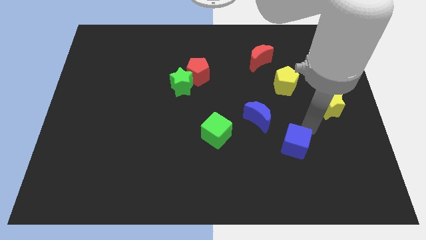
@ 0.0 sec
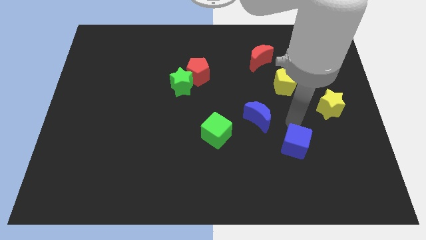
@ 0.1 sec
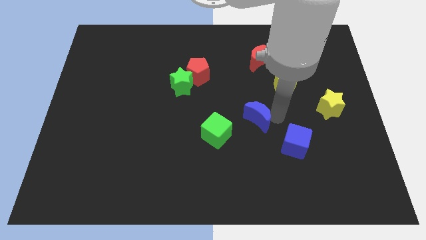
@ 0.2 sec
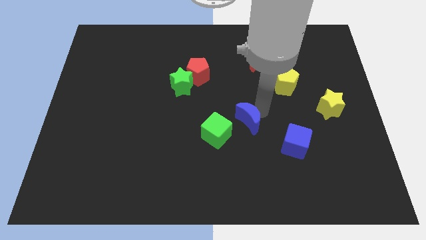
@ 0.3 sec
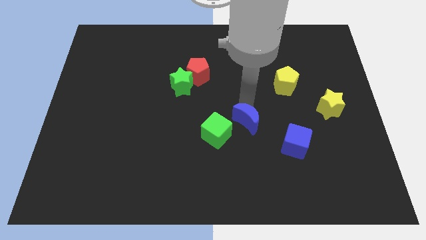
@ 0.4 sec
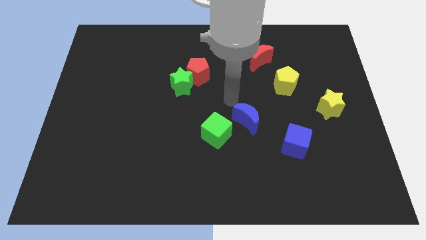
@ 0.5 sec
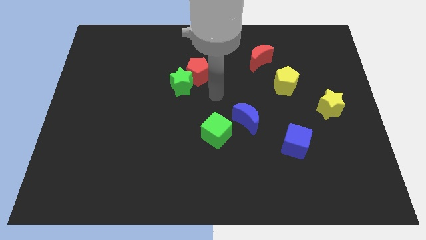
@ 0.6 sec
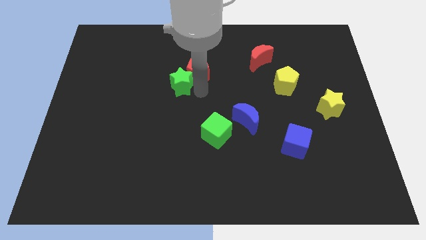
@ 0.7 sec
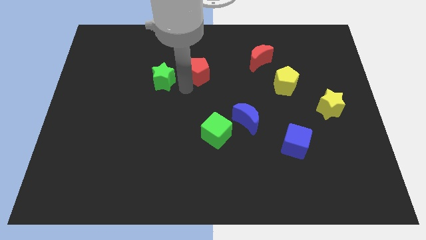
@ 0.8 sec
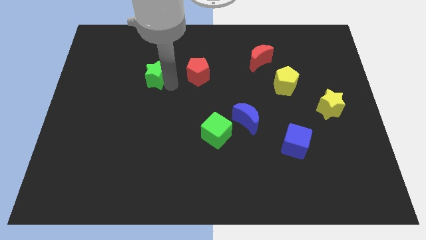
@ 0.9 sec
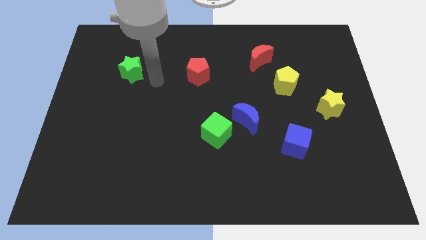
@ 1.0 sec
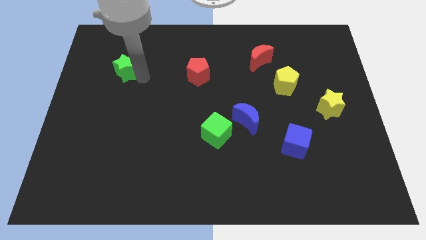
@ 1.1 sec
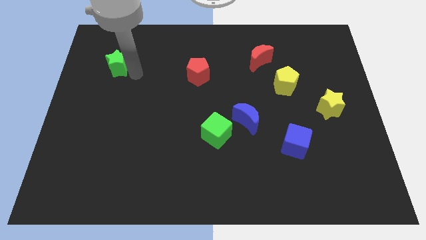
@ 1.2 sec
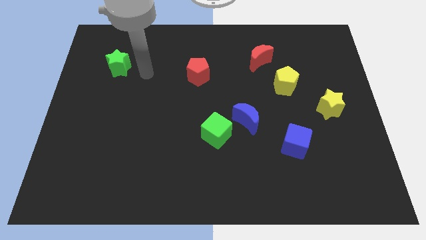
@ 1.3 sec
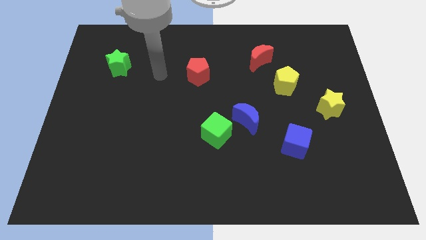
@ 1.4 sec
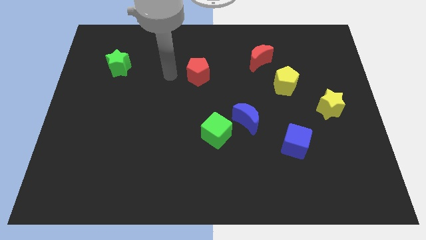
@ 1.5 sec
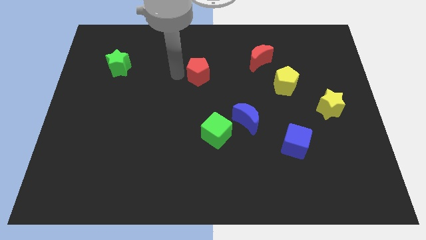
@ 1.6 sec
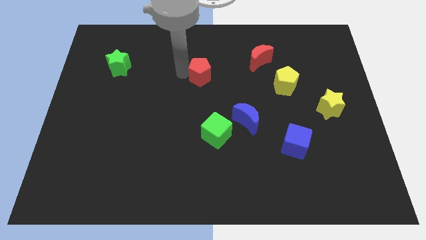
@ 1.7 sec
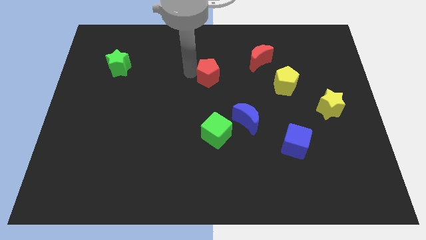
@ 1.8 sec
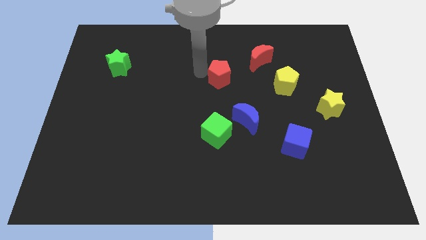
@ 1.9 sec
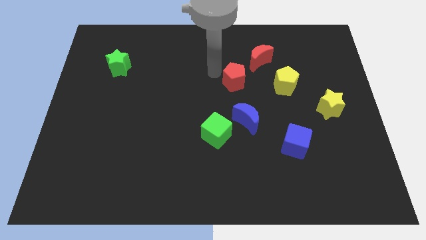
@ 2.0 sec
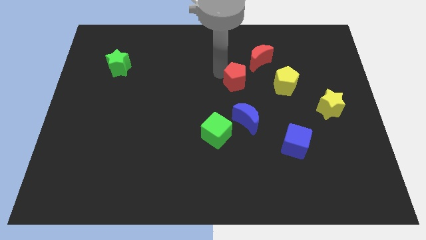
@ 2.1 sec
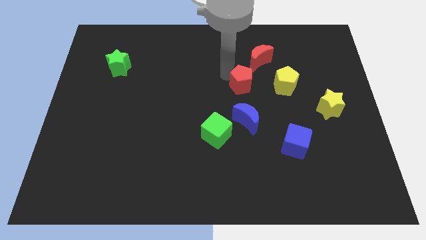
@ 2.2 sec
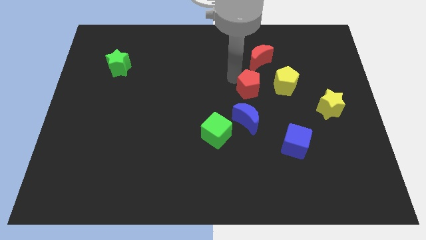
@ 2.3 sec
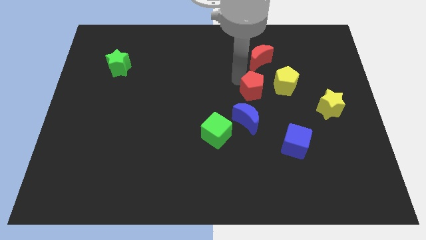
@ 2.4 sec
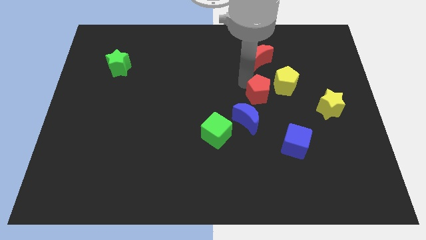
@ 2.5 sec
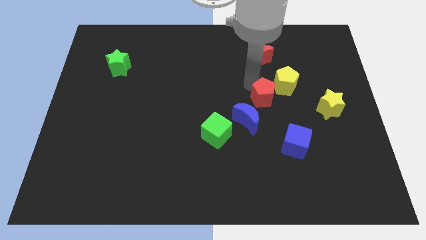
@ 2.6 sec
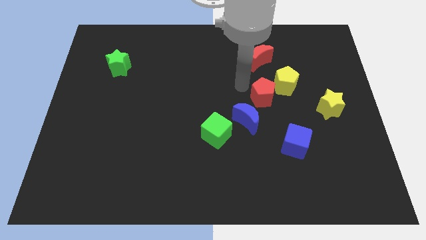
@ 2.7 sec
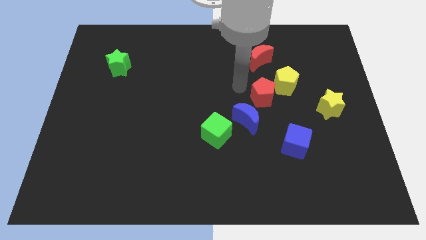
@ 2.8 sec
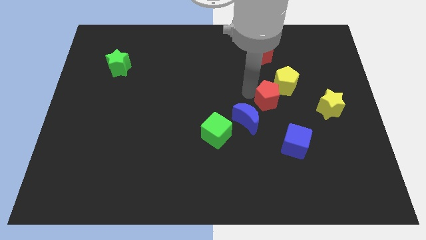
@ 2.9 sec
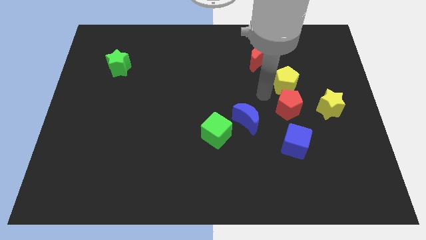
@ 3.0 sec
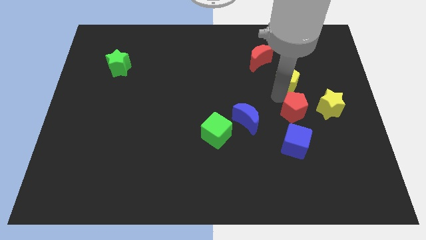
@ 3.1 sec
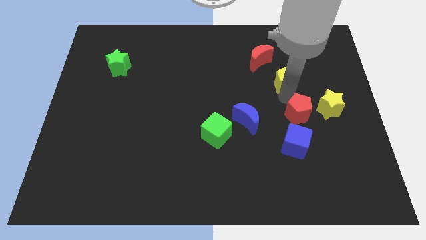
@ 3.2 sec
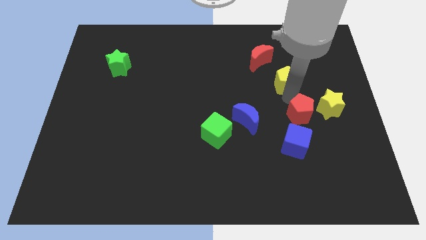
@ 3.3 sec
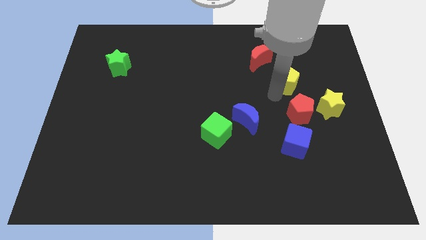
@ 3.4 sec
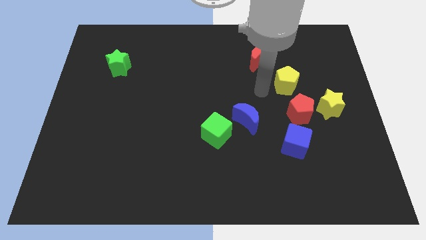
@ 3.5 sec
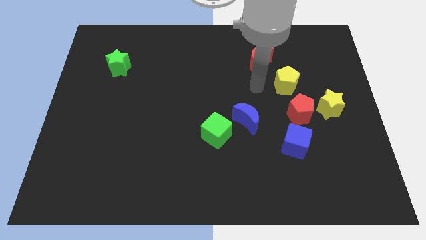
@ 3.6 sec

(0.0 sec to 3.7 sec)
push the red pentagon close to the yellow star

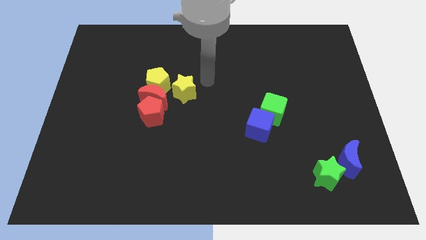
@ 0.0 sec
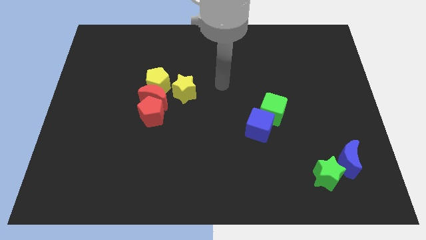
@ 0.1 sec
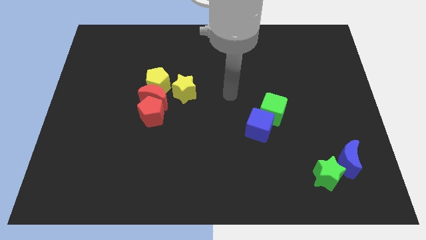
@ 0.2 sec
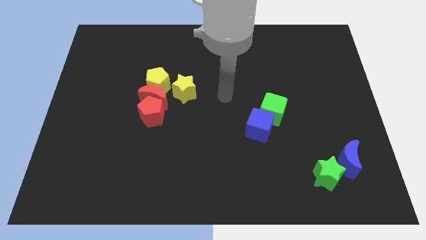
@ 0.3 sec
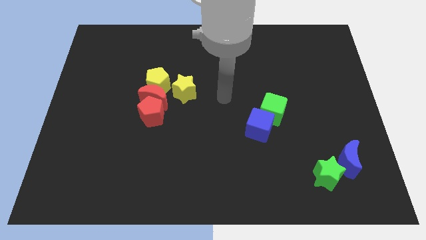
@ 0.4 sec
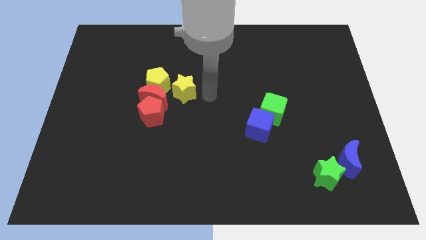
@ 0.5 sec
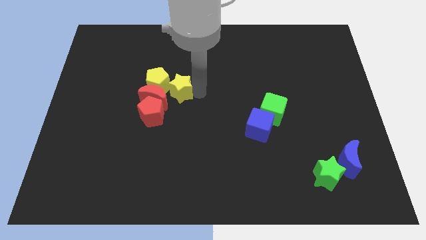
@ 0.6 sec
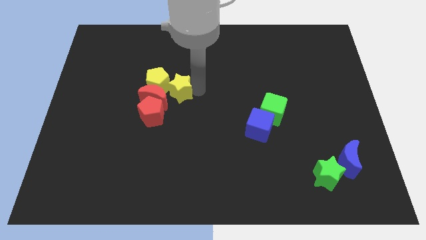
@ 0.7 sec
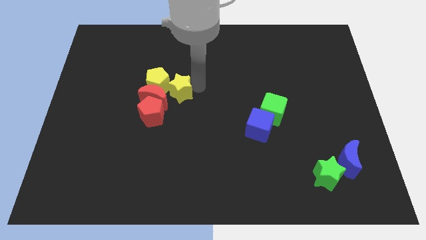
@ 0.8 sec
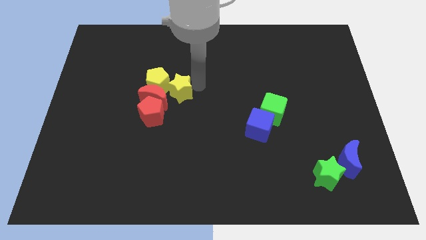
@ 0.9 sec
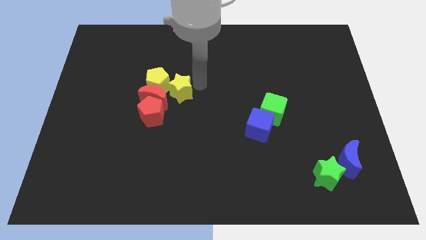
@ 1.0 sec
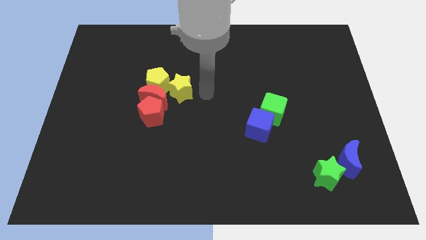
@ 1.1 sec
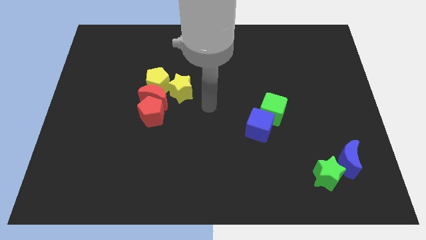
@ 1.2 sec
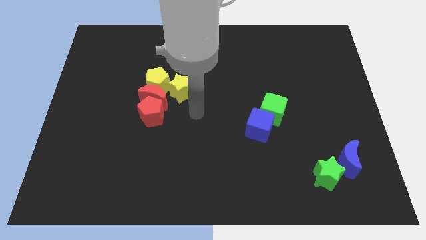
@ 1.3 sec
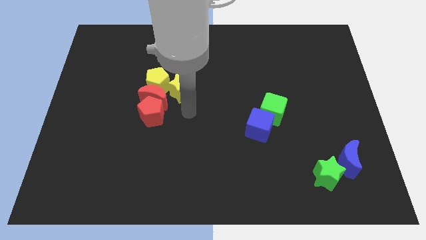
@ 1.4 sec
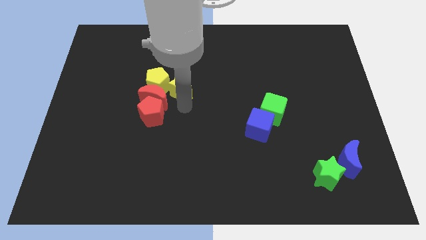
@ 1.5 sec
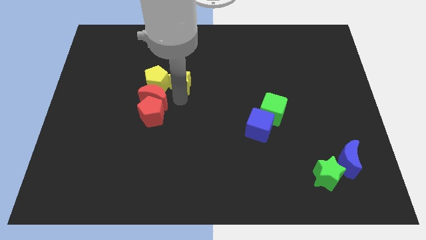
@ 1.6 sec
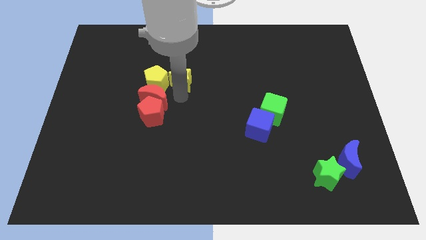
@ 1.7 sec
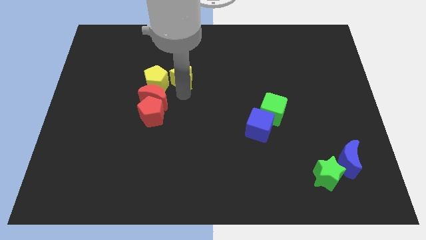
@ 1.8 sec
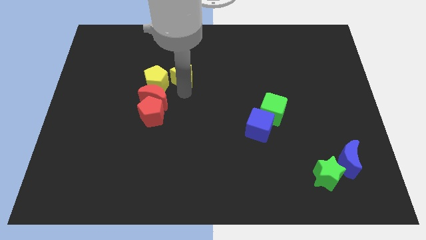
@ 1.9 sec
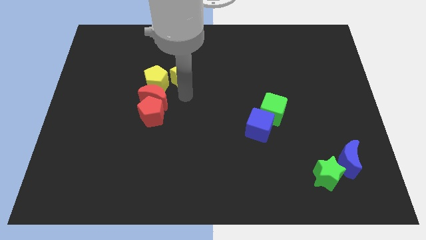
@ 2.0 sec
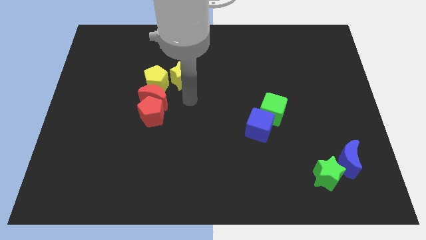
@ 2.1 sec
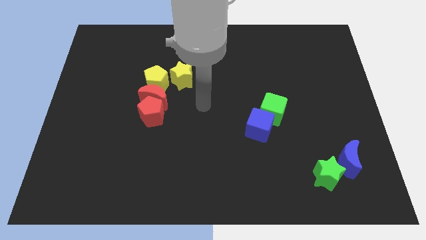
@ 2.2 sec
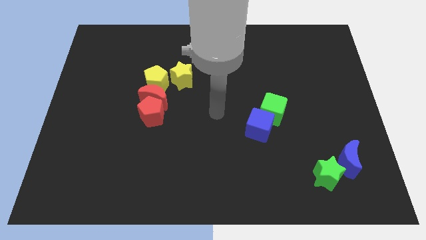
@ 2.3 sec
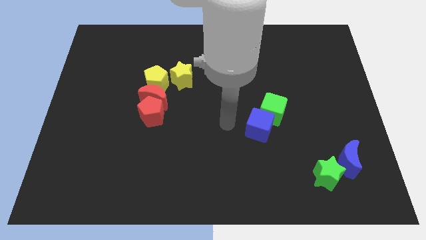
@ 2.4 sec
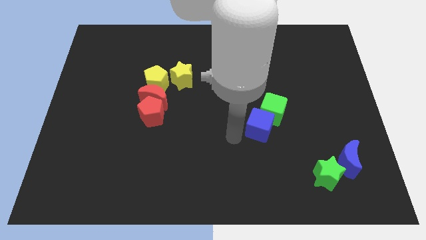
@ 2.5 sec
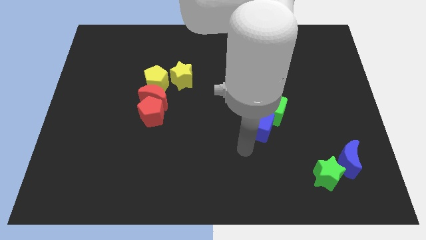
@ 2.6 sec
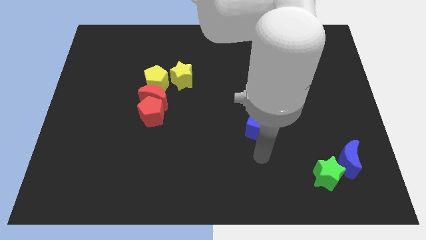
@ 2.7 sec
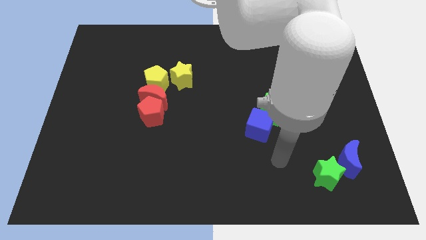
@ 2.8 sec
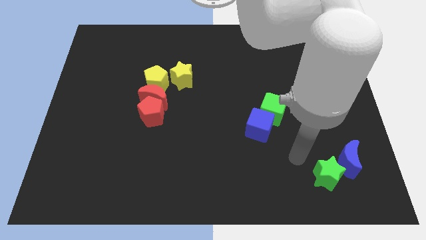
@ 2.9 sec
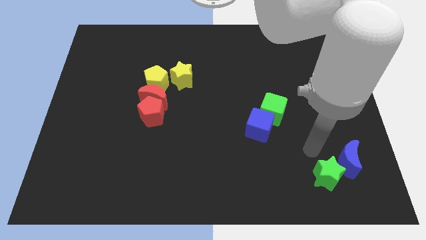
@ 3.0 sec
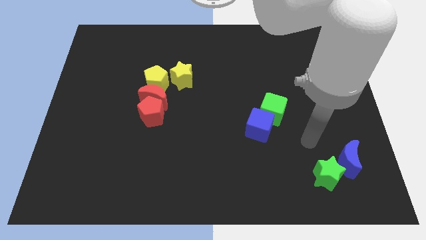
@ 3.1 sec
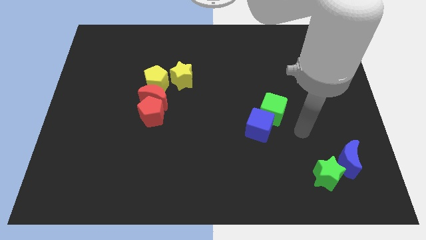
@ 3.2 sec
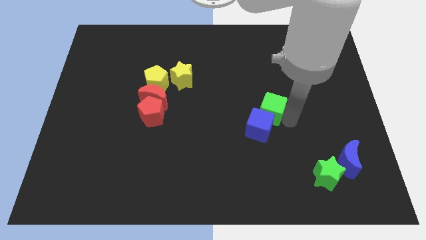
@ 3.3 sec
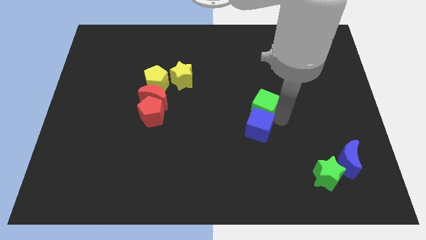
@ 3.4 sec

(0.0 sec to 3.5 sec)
move your arm right to the green cube

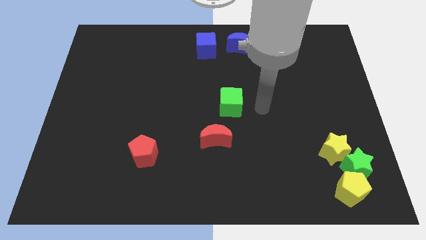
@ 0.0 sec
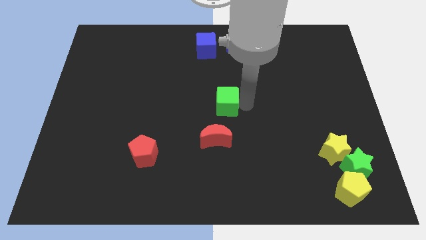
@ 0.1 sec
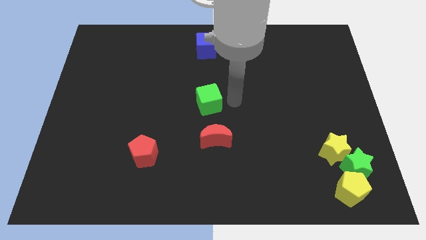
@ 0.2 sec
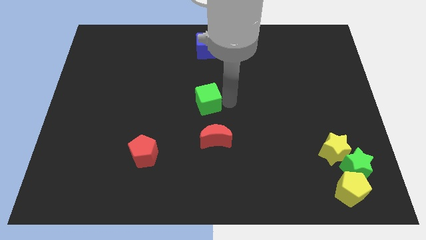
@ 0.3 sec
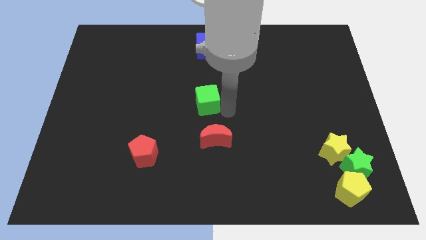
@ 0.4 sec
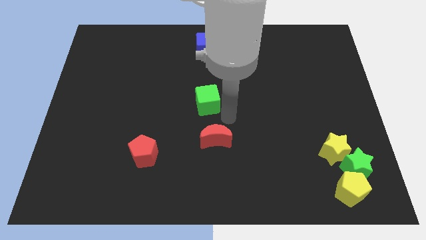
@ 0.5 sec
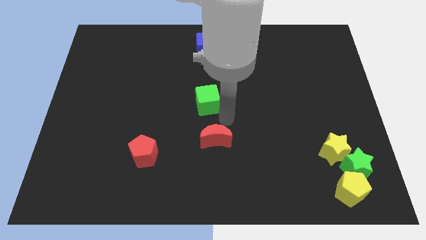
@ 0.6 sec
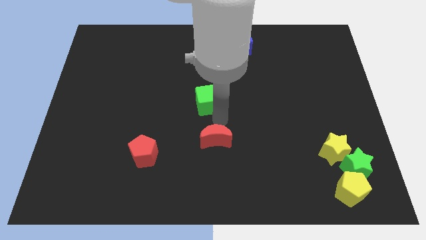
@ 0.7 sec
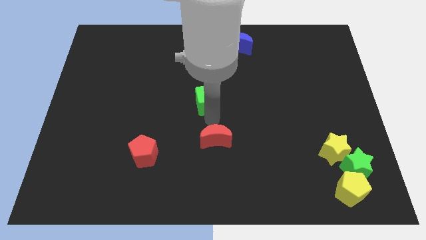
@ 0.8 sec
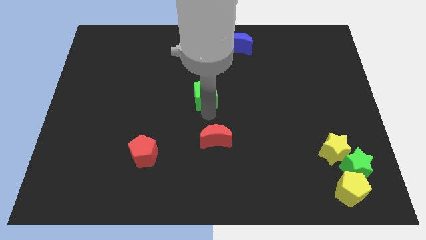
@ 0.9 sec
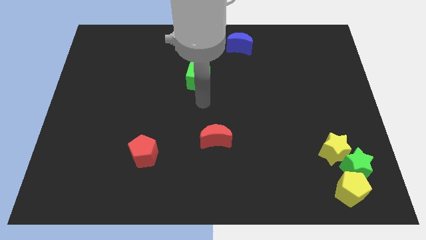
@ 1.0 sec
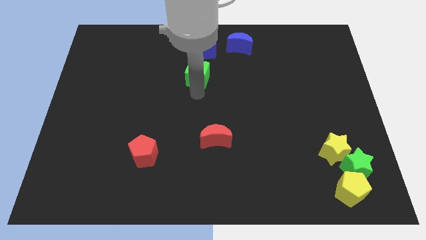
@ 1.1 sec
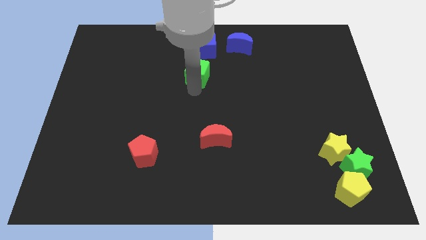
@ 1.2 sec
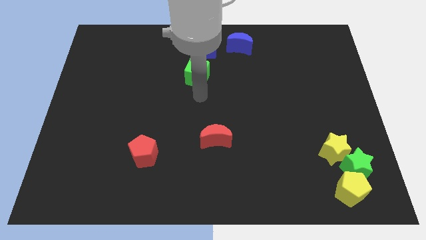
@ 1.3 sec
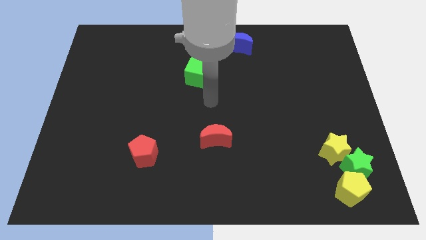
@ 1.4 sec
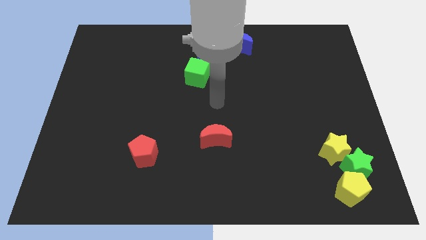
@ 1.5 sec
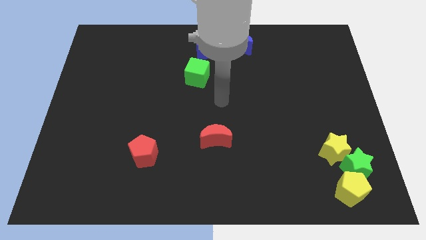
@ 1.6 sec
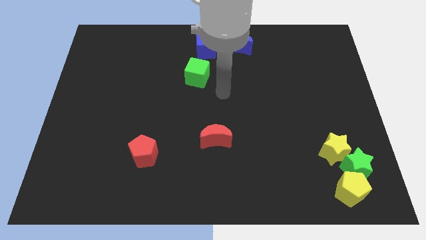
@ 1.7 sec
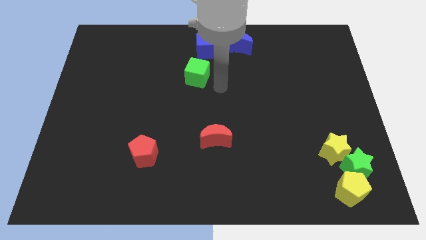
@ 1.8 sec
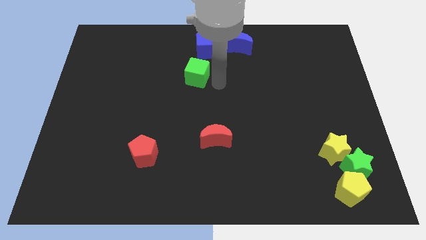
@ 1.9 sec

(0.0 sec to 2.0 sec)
push the green cube diagonally bottom left to the blue moon
